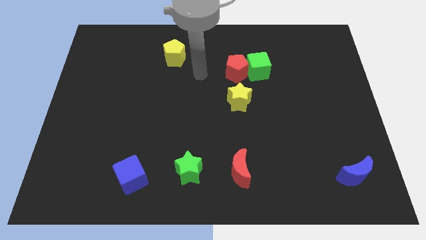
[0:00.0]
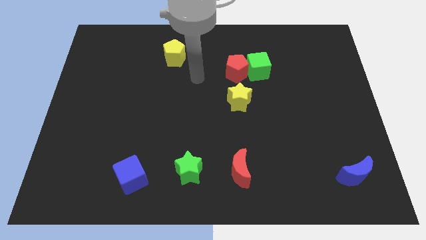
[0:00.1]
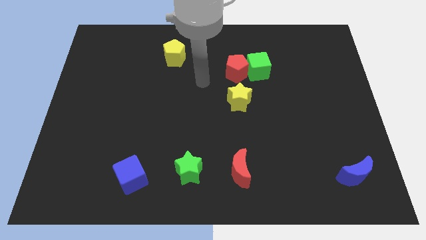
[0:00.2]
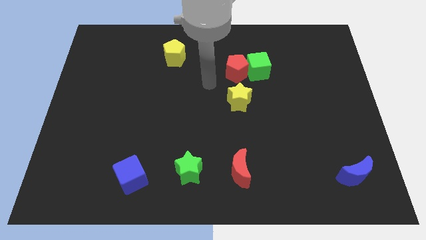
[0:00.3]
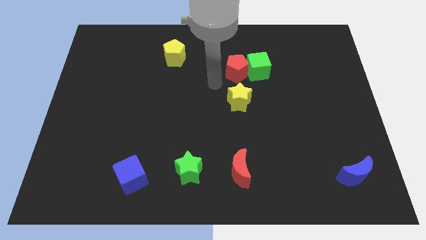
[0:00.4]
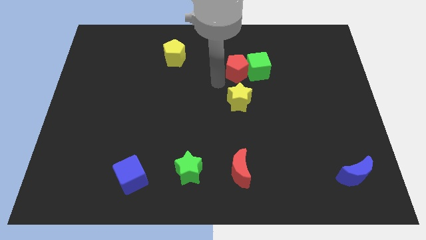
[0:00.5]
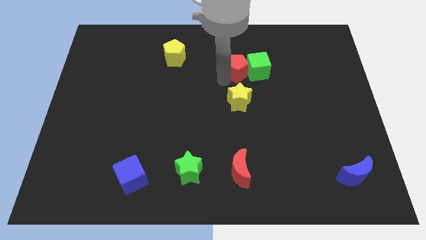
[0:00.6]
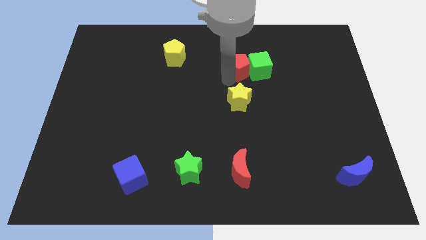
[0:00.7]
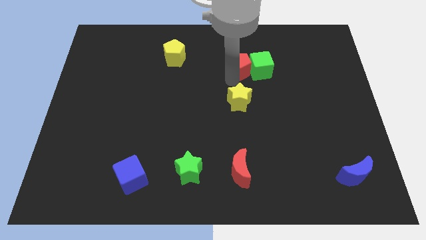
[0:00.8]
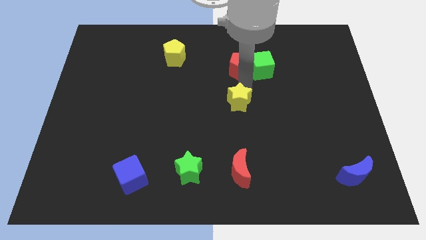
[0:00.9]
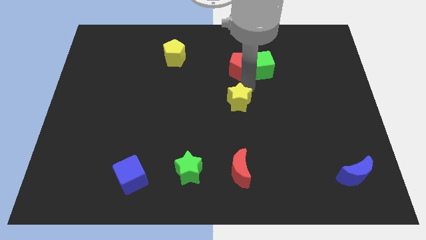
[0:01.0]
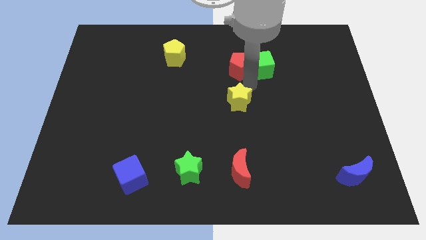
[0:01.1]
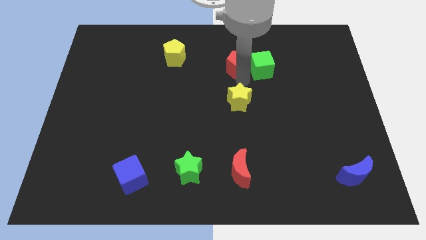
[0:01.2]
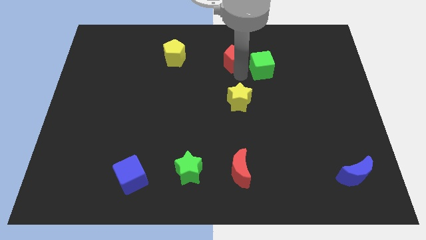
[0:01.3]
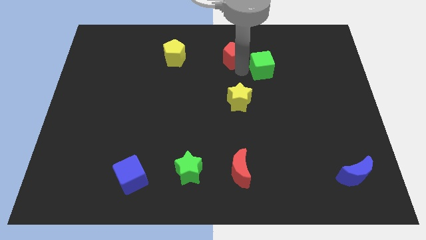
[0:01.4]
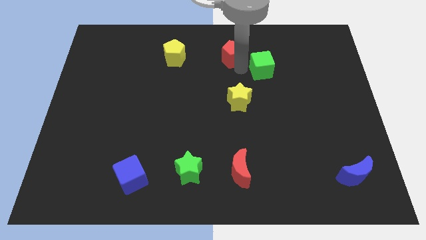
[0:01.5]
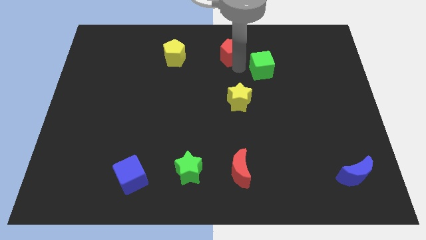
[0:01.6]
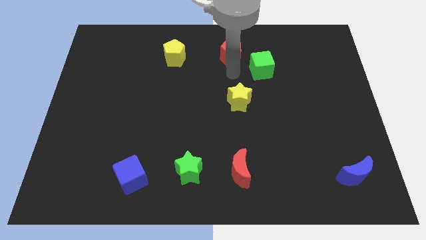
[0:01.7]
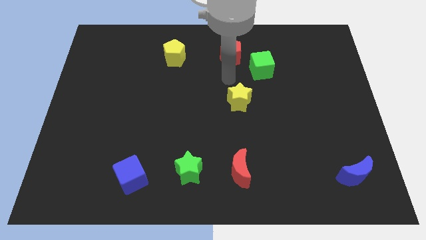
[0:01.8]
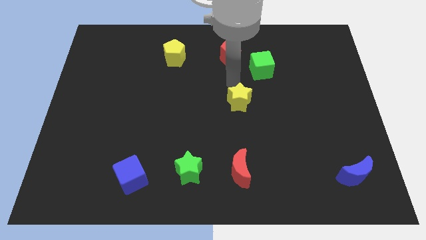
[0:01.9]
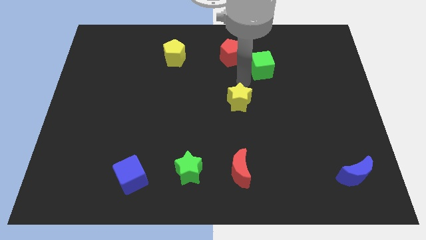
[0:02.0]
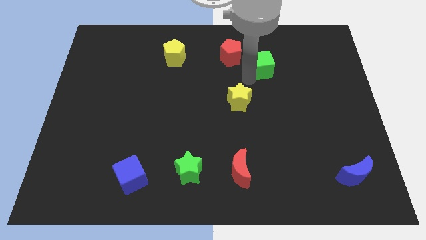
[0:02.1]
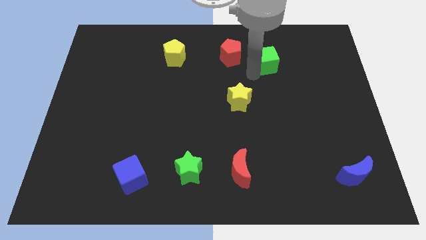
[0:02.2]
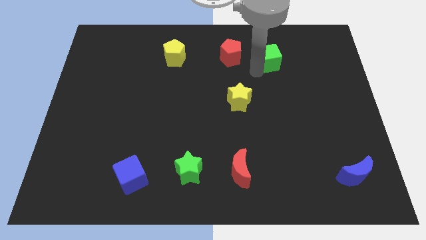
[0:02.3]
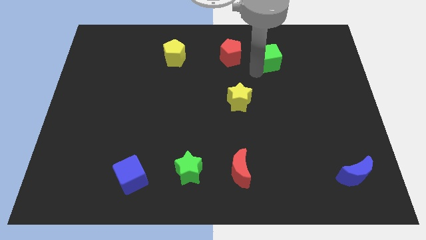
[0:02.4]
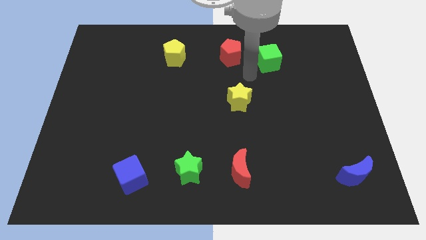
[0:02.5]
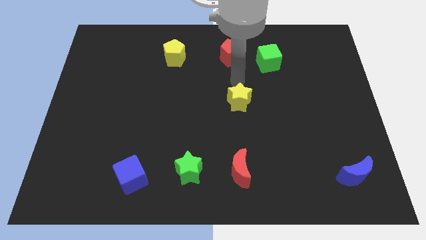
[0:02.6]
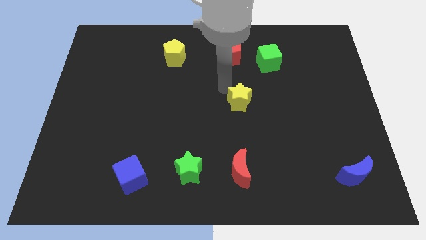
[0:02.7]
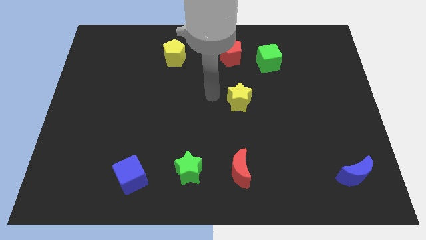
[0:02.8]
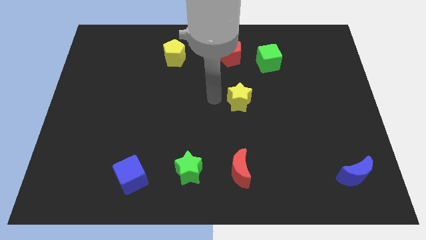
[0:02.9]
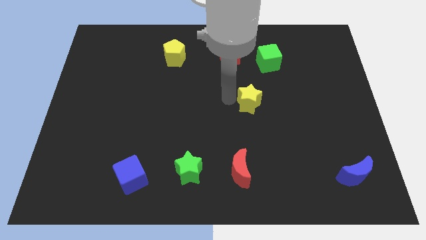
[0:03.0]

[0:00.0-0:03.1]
separate the red pentagon and green cube from each other

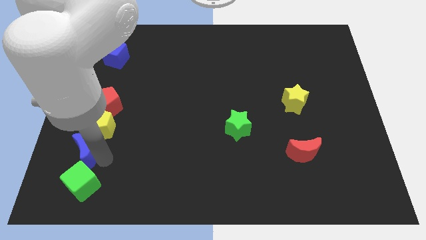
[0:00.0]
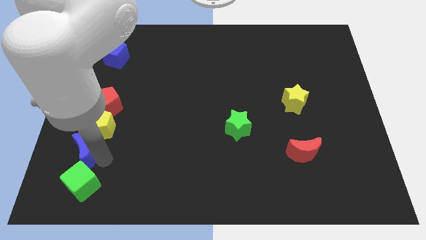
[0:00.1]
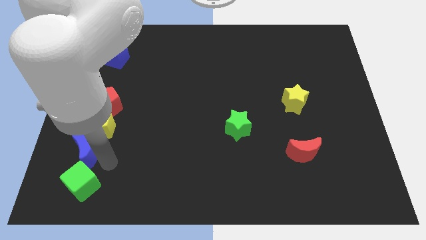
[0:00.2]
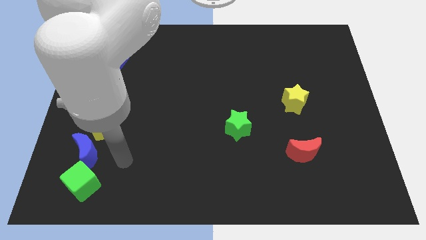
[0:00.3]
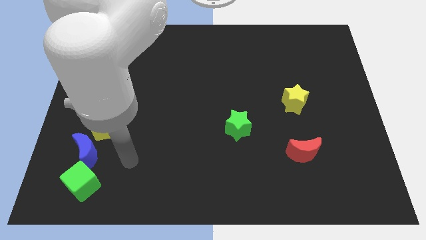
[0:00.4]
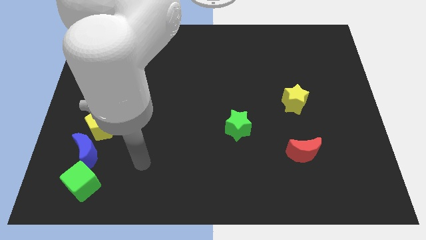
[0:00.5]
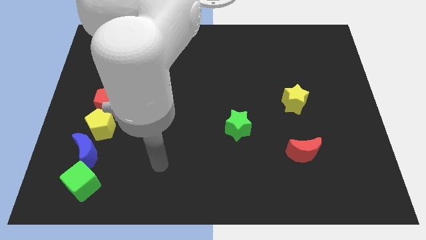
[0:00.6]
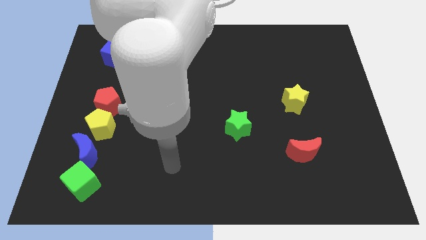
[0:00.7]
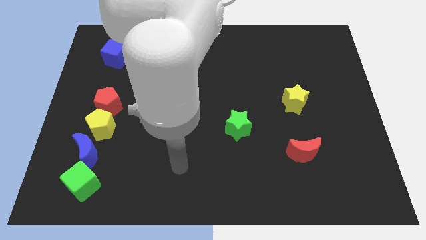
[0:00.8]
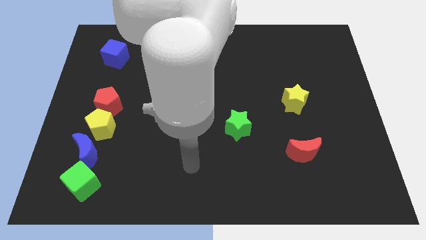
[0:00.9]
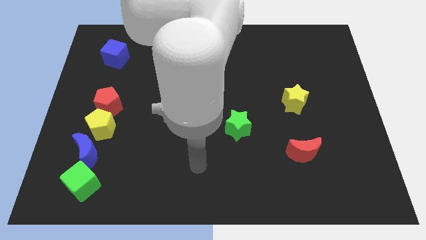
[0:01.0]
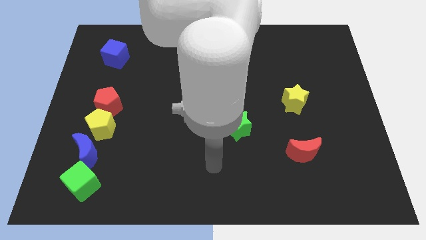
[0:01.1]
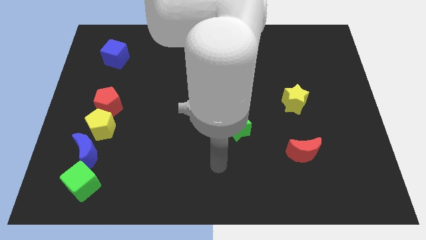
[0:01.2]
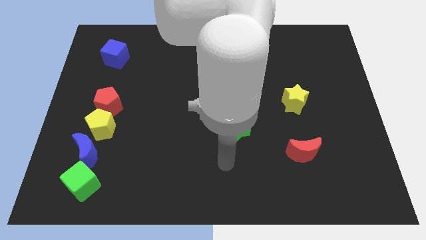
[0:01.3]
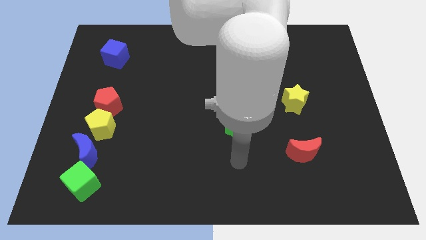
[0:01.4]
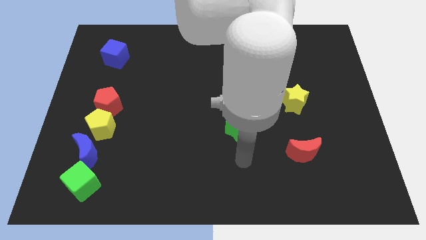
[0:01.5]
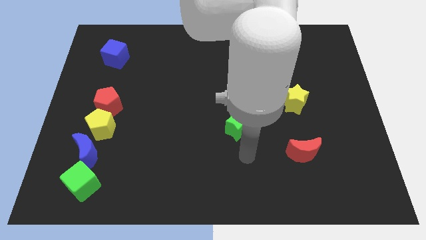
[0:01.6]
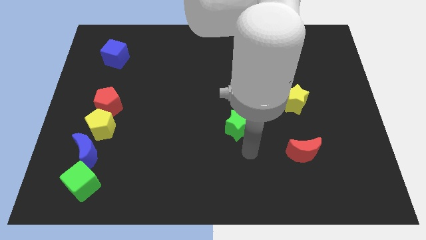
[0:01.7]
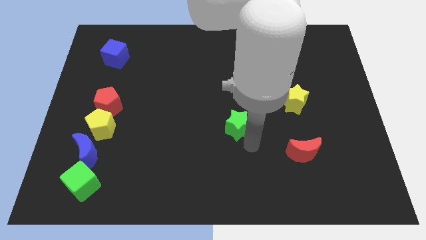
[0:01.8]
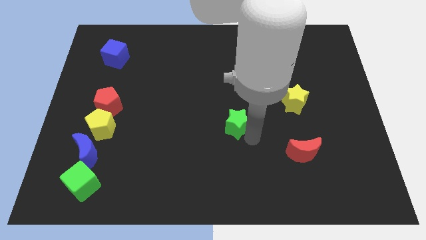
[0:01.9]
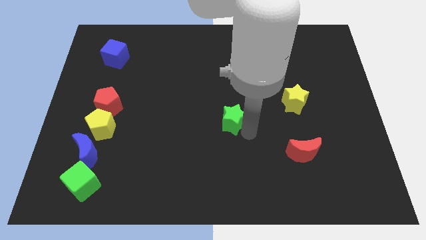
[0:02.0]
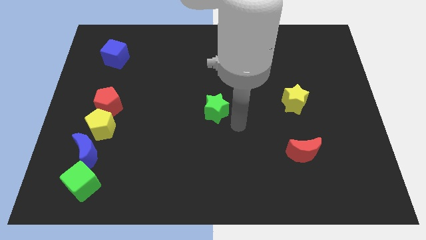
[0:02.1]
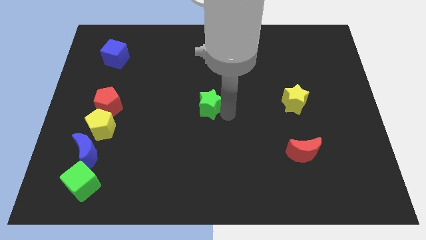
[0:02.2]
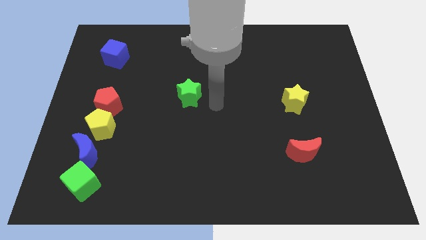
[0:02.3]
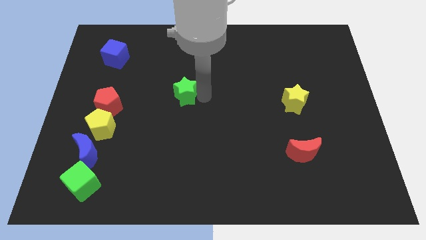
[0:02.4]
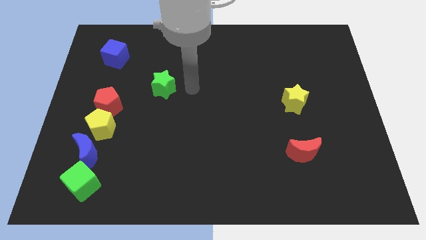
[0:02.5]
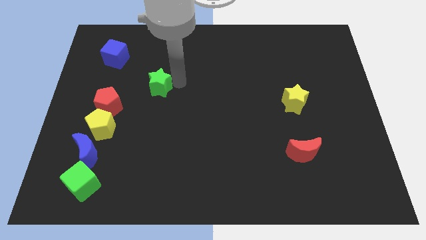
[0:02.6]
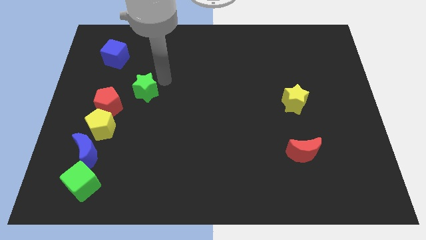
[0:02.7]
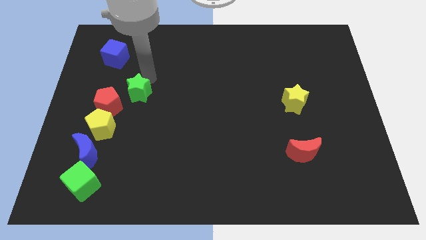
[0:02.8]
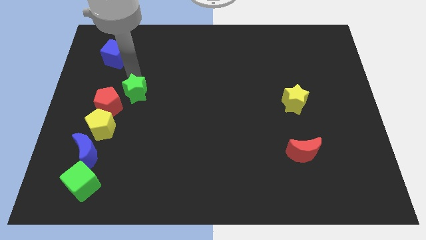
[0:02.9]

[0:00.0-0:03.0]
slide the green star top right to red pentagon

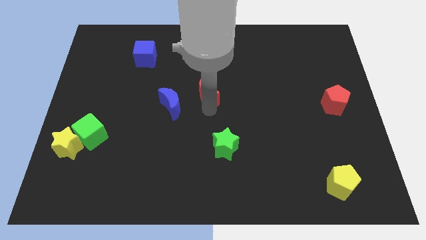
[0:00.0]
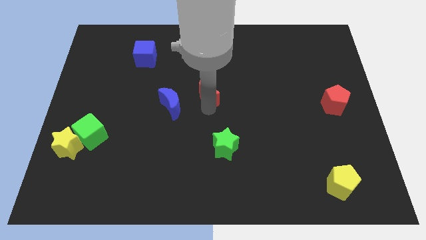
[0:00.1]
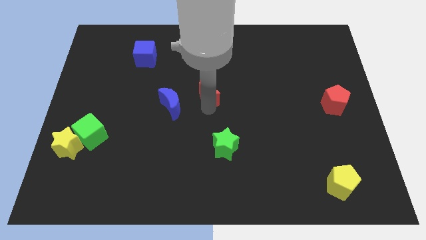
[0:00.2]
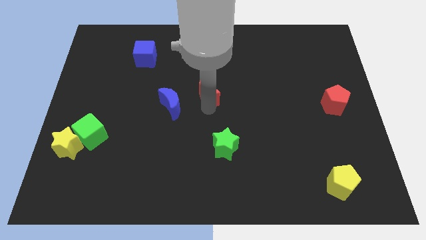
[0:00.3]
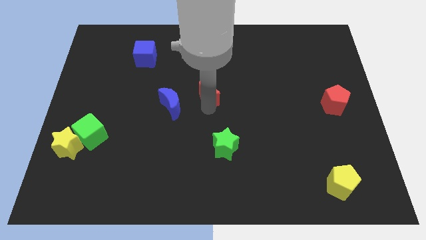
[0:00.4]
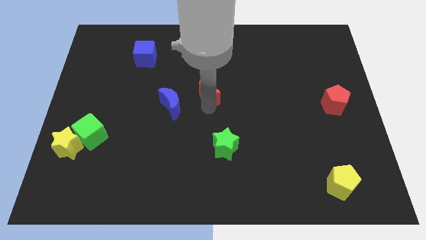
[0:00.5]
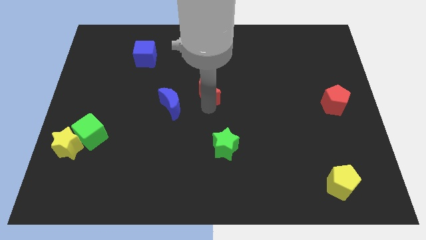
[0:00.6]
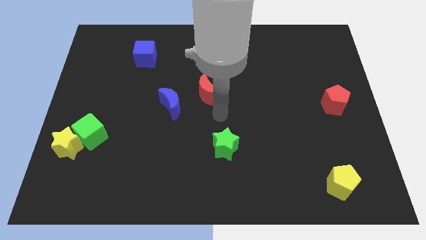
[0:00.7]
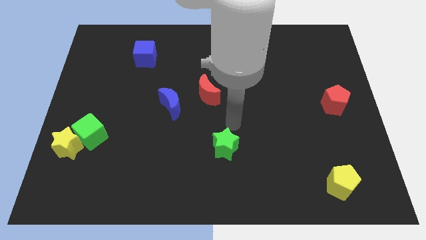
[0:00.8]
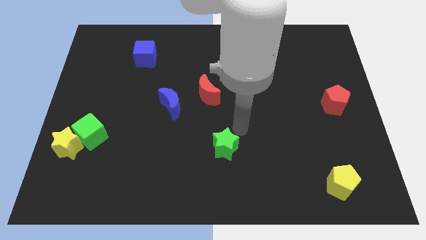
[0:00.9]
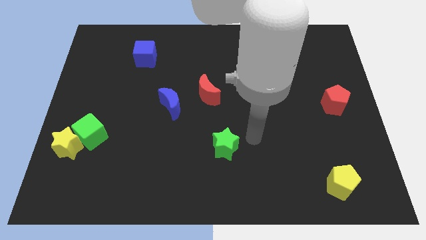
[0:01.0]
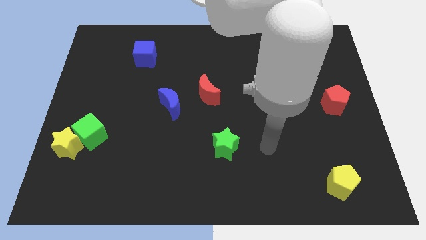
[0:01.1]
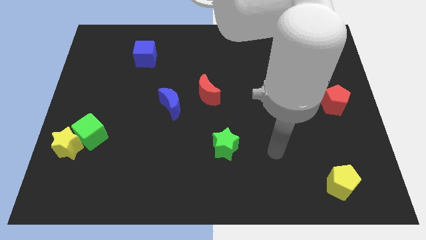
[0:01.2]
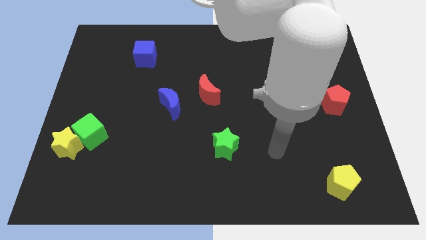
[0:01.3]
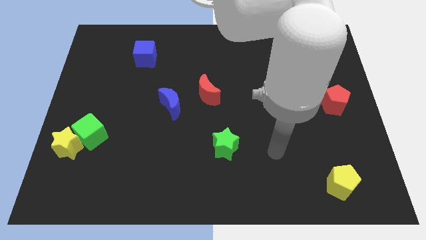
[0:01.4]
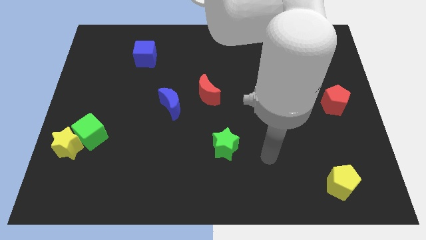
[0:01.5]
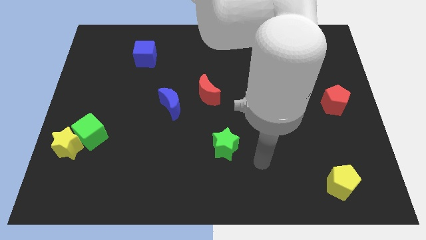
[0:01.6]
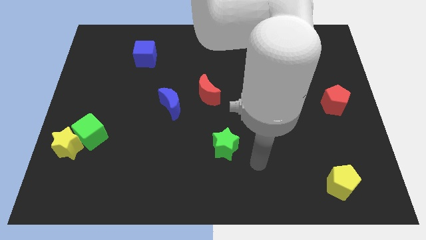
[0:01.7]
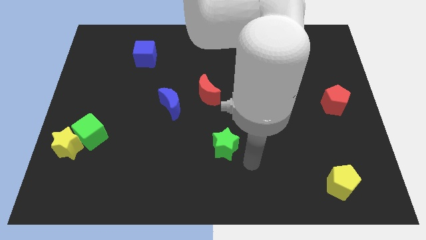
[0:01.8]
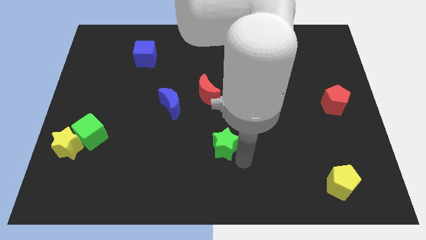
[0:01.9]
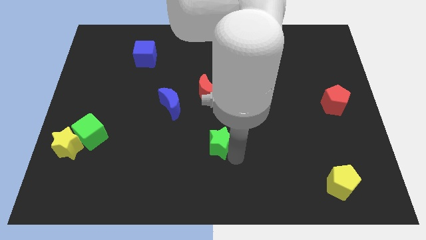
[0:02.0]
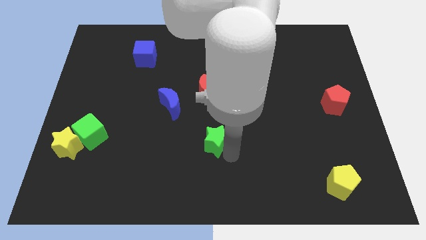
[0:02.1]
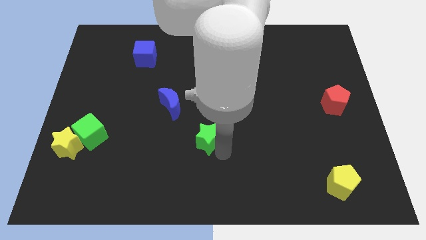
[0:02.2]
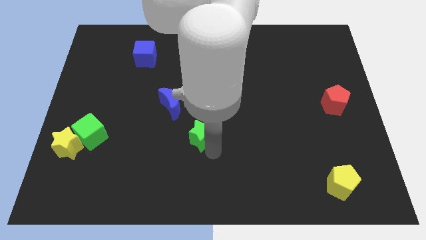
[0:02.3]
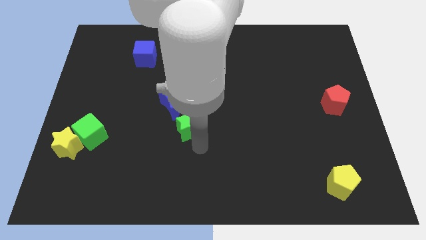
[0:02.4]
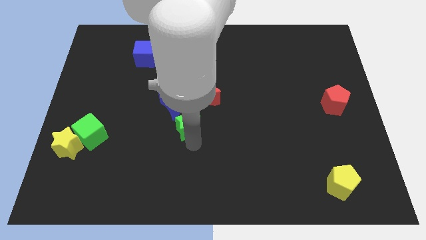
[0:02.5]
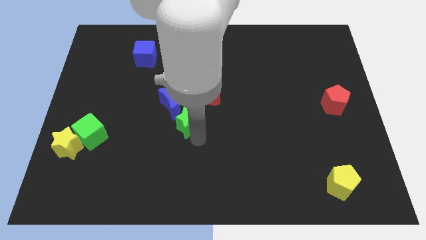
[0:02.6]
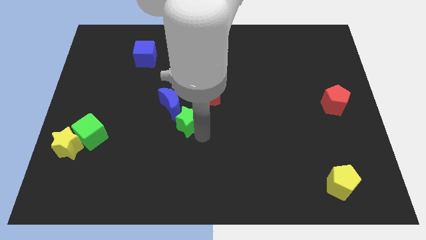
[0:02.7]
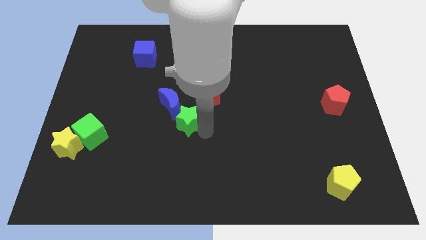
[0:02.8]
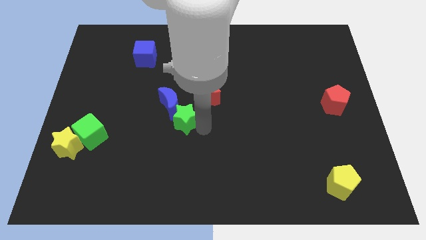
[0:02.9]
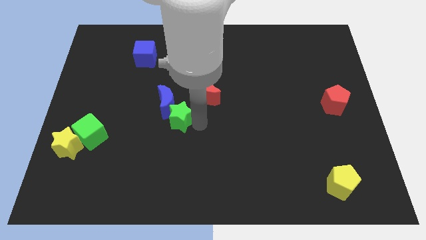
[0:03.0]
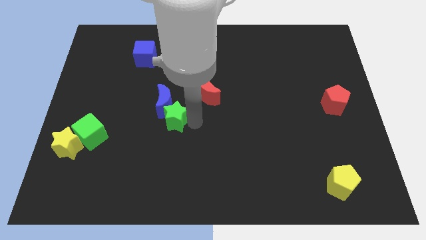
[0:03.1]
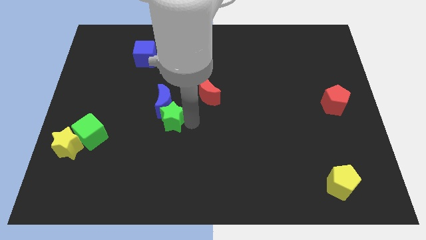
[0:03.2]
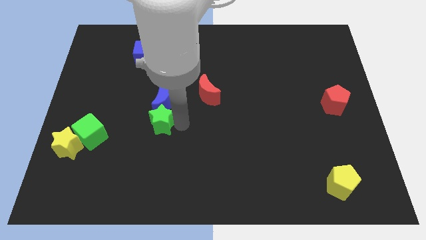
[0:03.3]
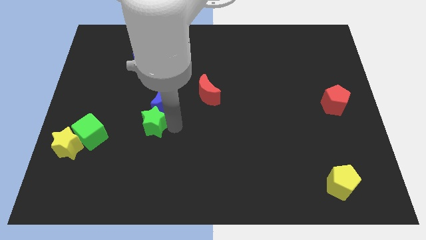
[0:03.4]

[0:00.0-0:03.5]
put the green star at the bottom of the blue crescent
